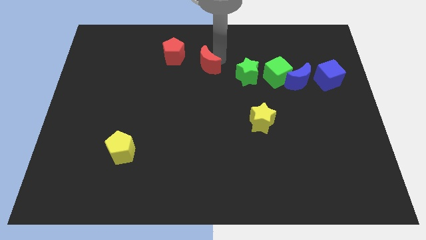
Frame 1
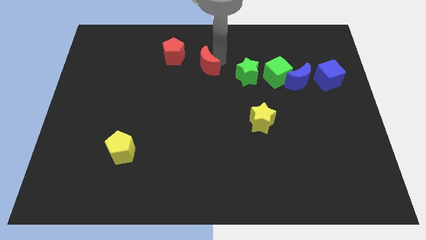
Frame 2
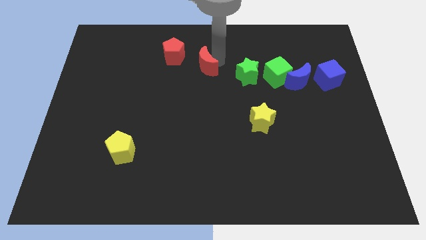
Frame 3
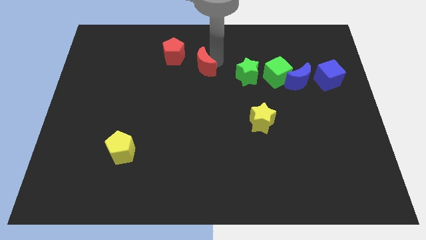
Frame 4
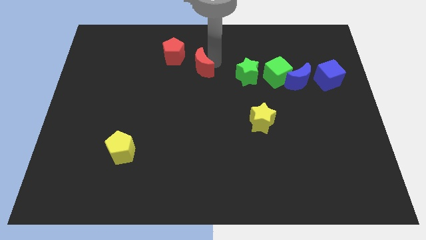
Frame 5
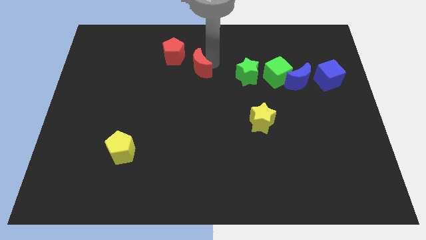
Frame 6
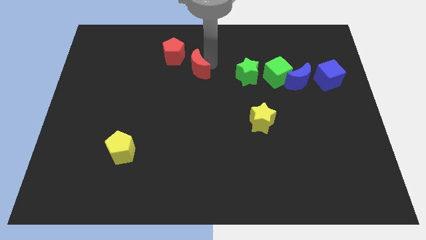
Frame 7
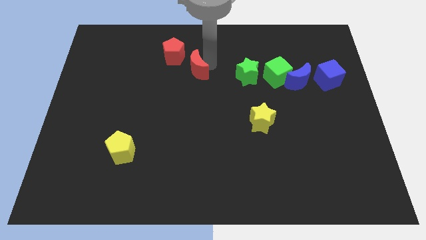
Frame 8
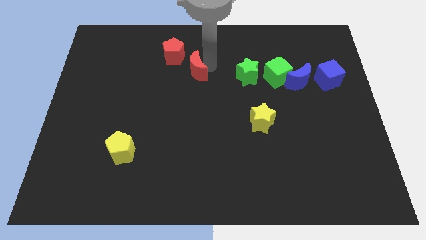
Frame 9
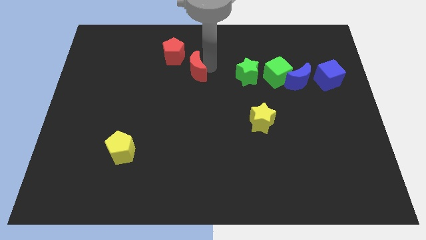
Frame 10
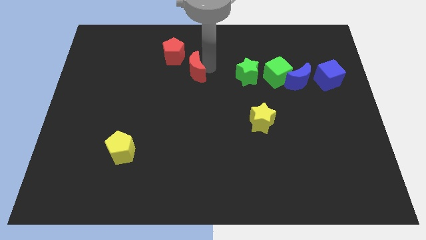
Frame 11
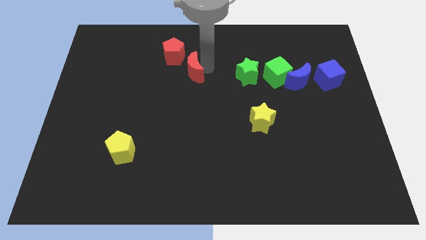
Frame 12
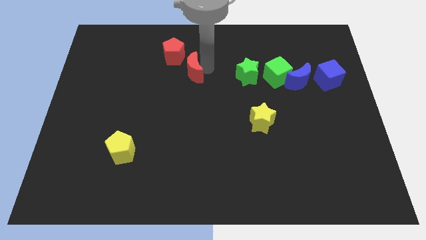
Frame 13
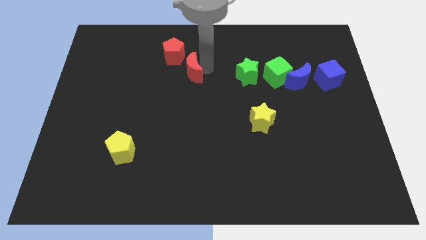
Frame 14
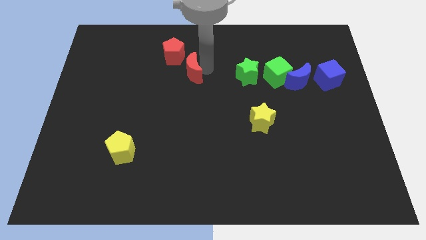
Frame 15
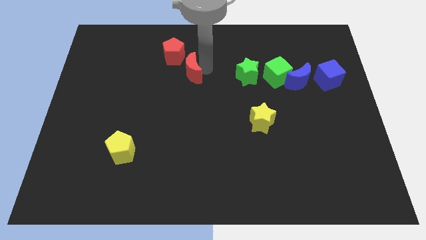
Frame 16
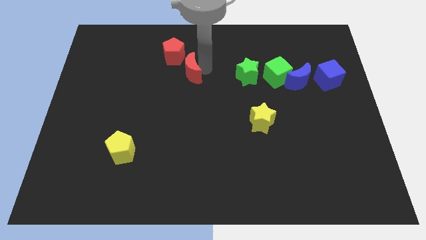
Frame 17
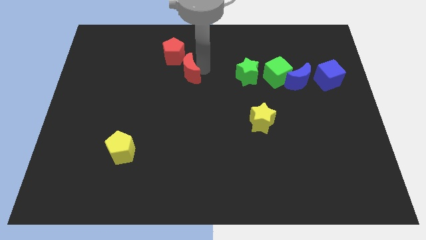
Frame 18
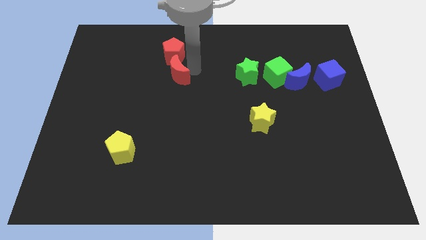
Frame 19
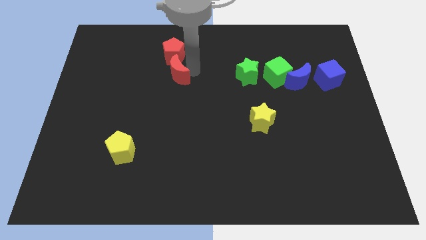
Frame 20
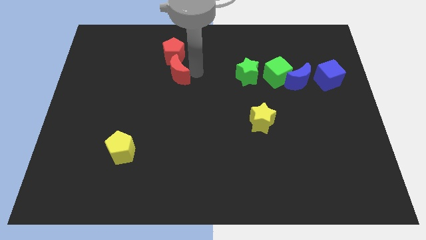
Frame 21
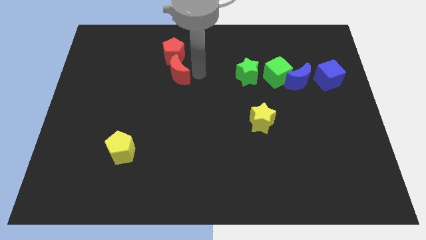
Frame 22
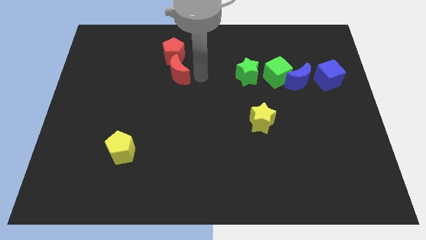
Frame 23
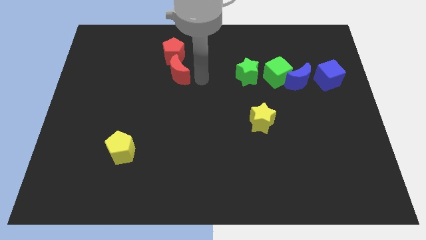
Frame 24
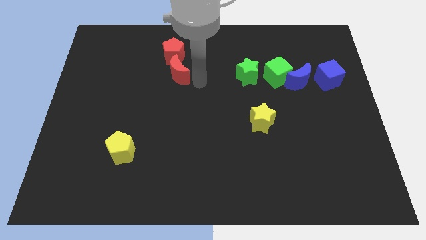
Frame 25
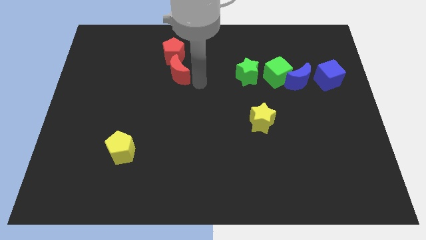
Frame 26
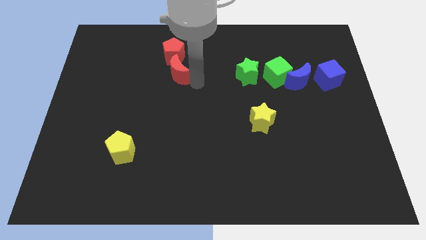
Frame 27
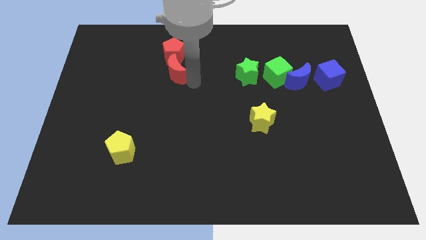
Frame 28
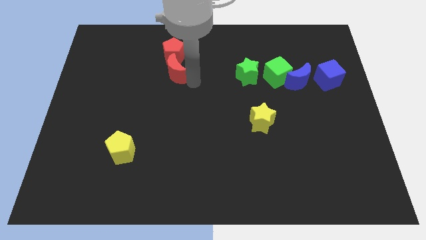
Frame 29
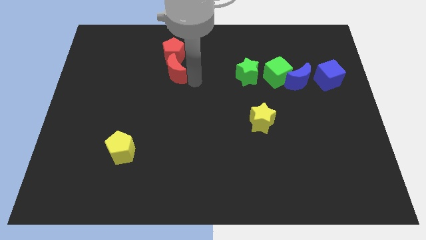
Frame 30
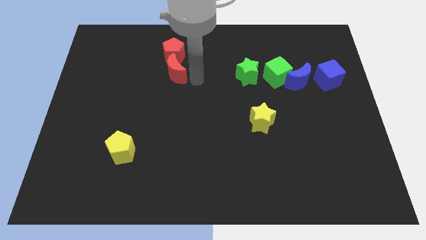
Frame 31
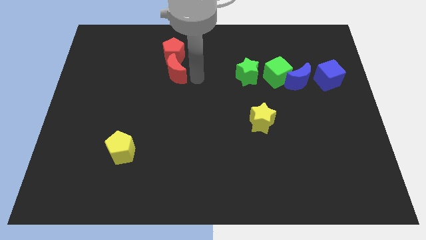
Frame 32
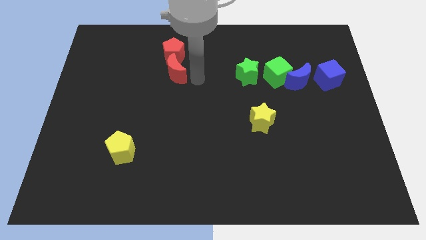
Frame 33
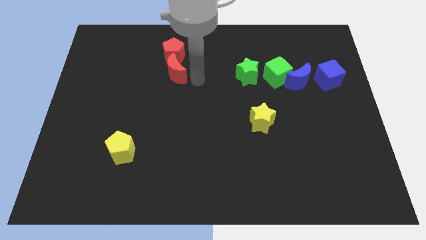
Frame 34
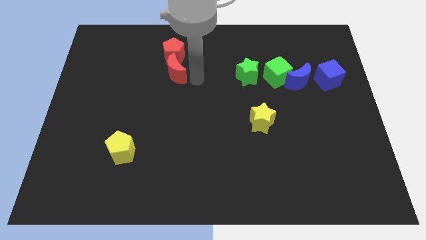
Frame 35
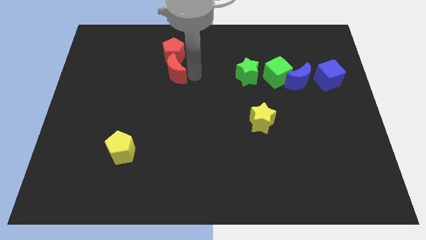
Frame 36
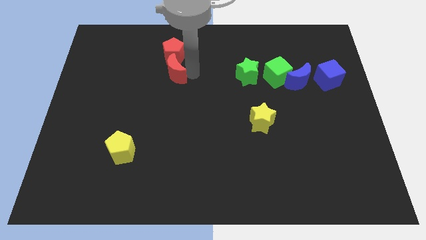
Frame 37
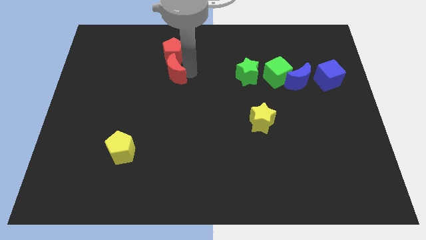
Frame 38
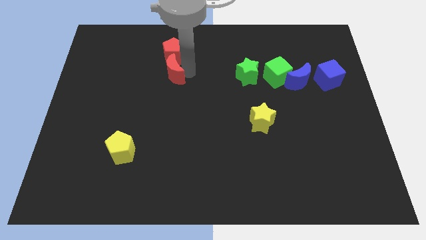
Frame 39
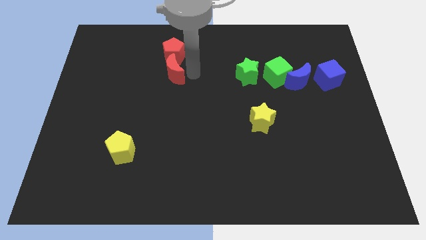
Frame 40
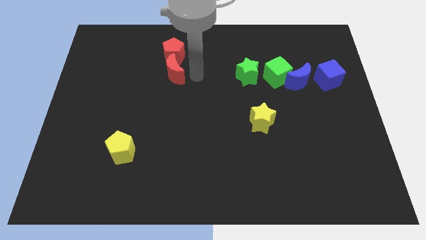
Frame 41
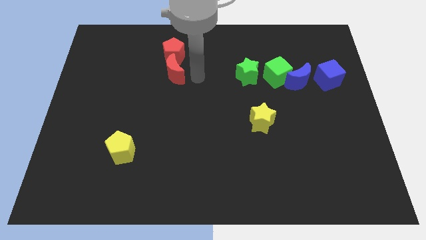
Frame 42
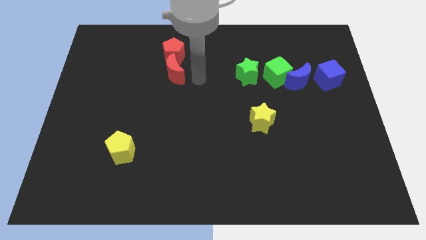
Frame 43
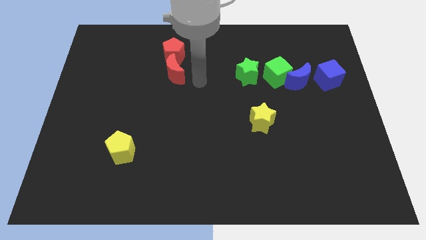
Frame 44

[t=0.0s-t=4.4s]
push the red crescent to the bottom of the red pentagon

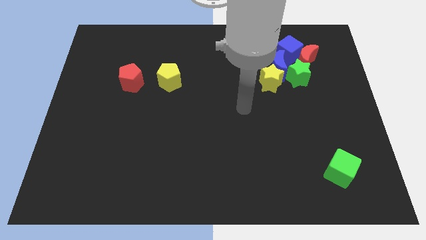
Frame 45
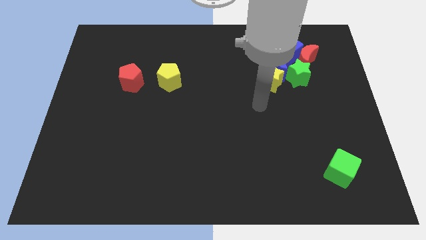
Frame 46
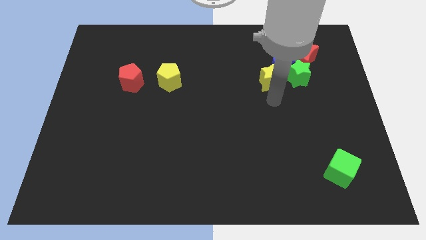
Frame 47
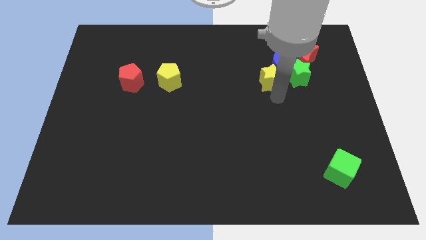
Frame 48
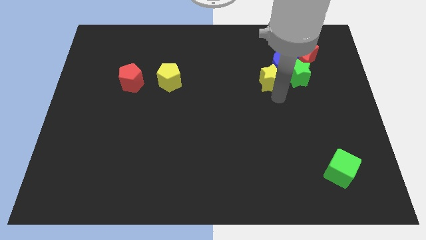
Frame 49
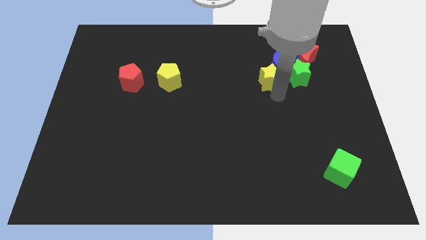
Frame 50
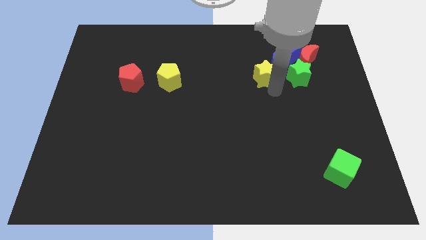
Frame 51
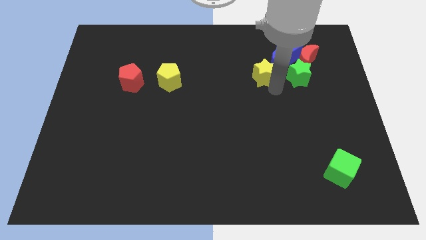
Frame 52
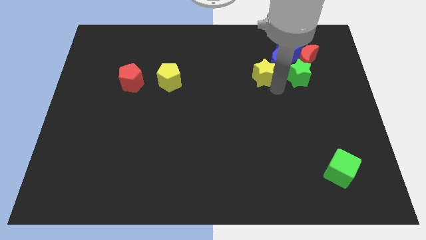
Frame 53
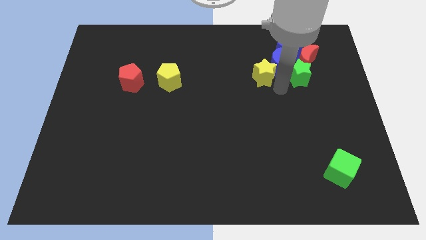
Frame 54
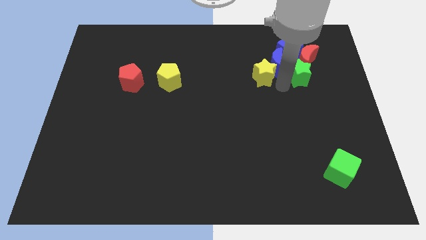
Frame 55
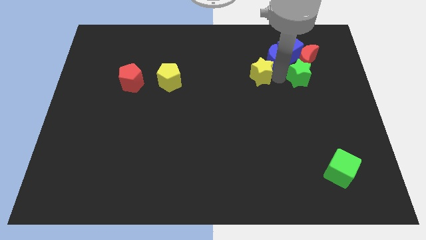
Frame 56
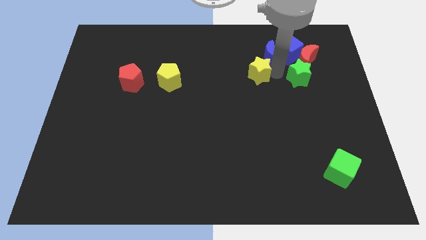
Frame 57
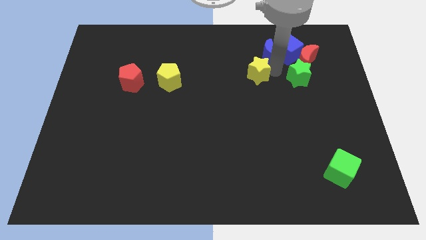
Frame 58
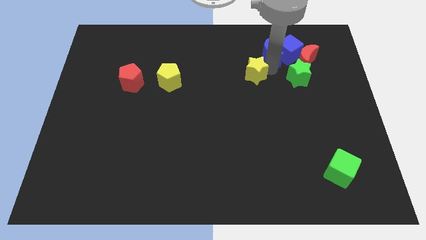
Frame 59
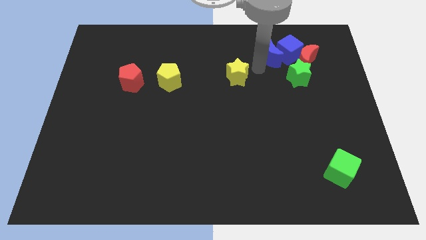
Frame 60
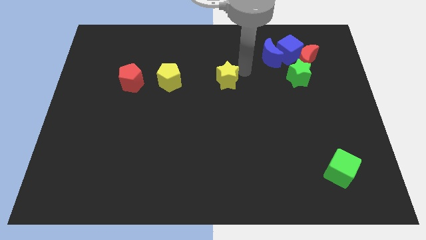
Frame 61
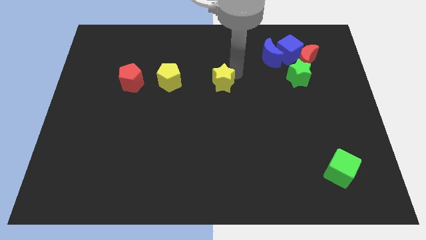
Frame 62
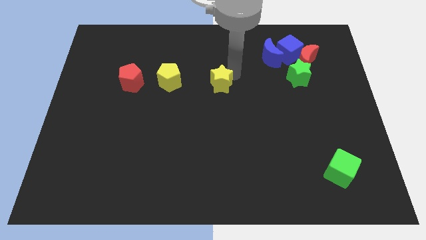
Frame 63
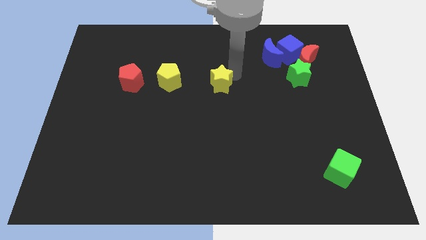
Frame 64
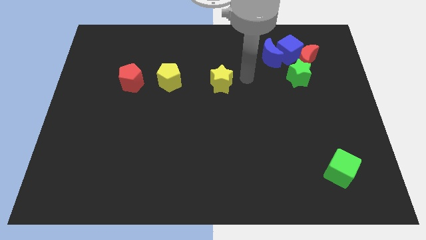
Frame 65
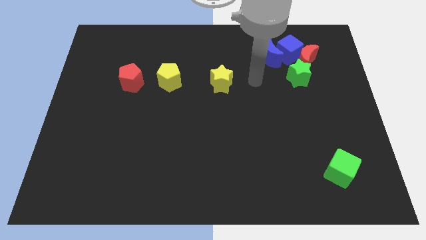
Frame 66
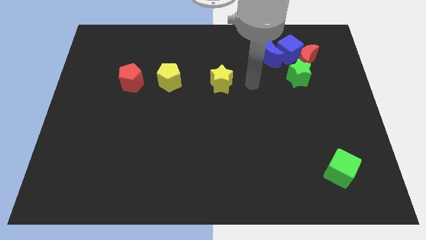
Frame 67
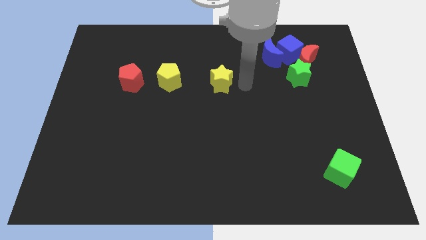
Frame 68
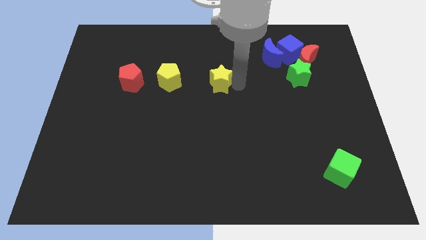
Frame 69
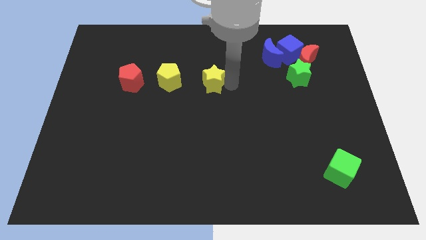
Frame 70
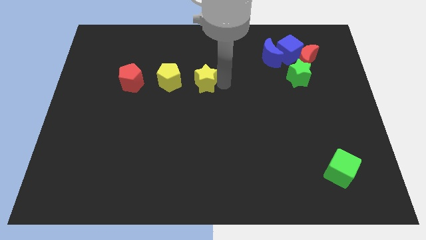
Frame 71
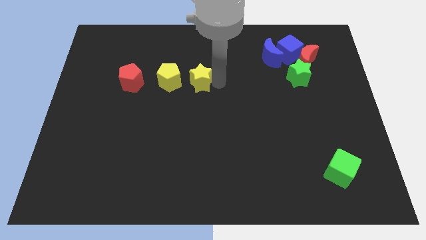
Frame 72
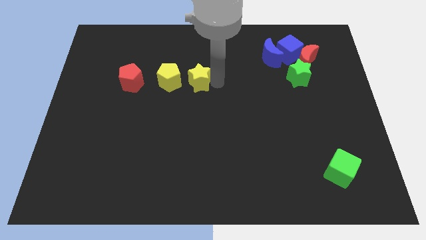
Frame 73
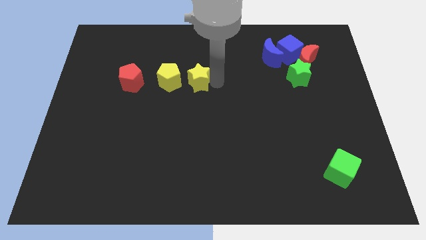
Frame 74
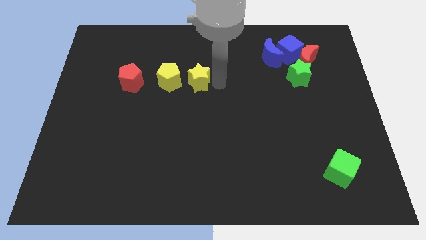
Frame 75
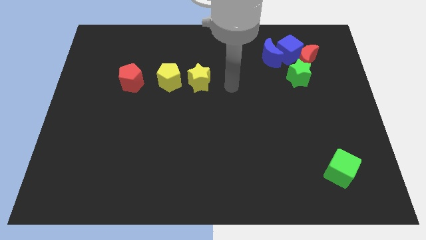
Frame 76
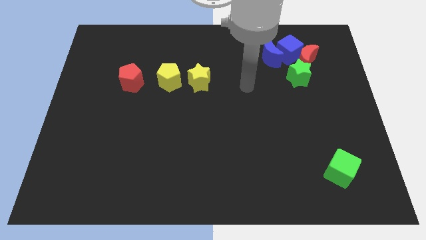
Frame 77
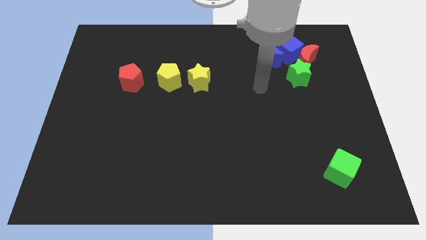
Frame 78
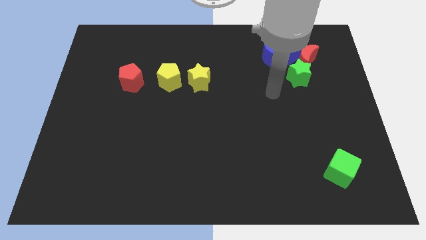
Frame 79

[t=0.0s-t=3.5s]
push the yellow star to the right of the yellow pentagon

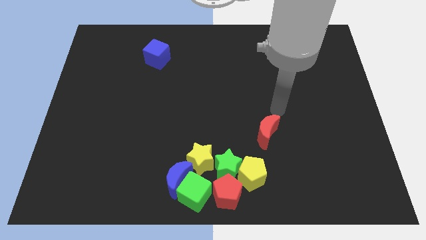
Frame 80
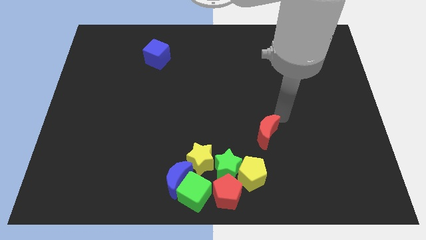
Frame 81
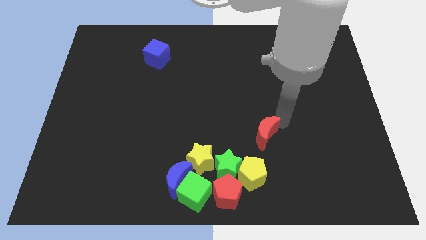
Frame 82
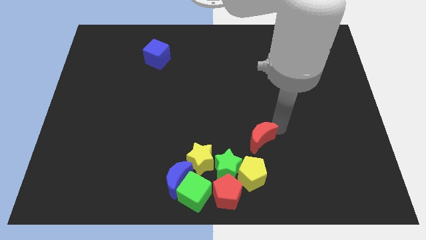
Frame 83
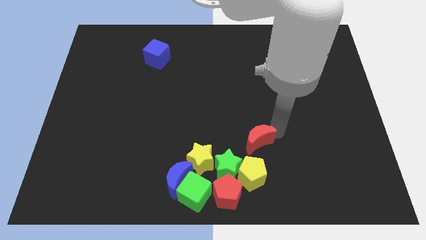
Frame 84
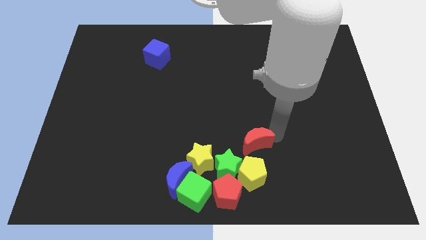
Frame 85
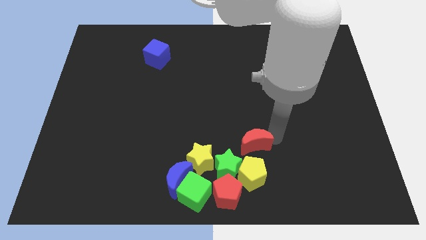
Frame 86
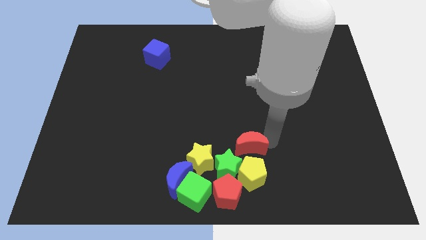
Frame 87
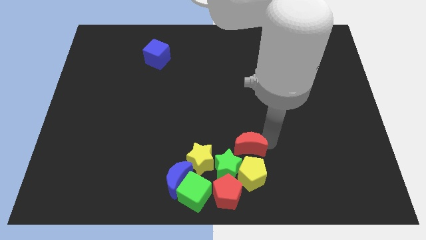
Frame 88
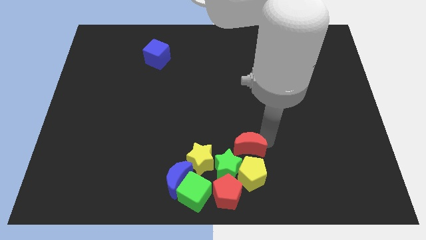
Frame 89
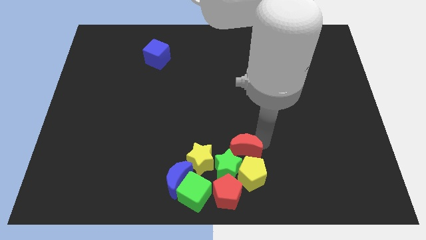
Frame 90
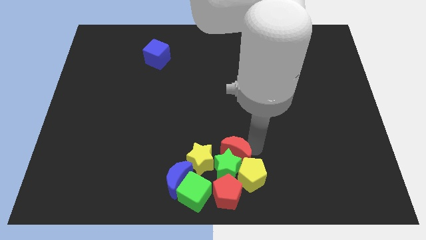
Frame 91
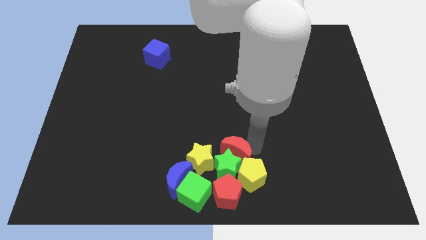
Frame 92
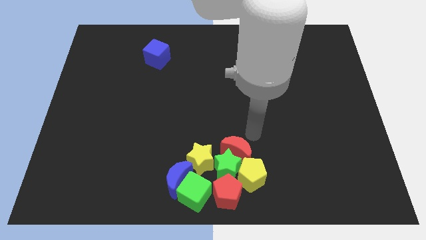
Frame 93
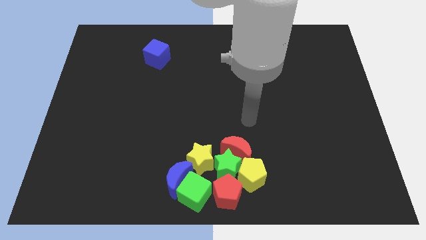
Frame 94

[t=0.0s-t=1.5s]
put the red moon at the top of the green star
